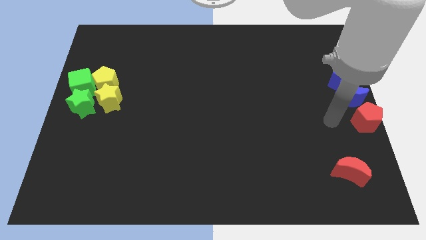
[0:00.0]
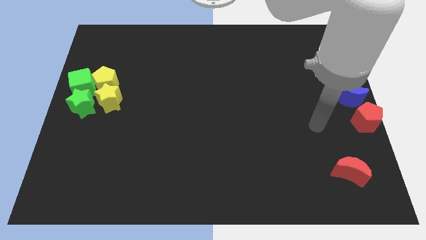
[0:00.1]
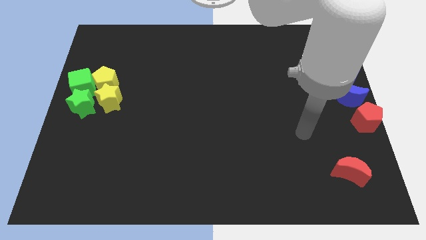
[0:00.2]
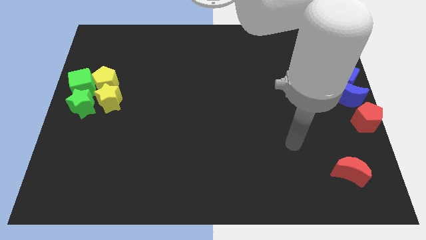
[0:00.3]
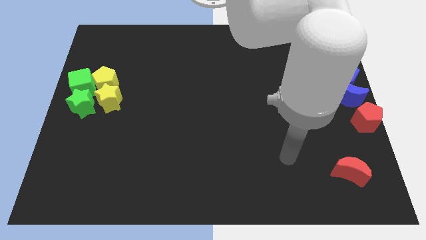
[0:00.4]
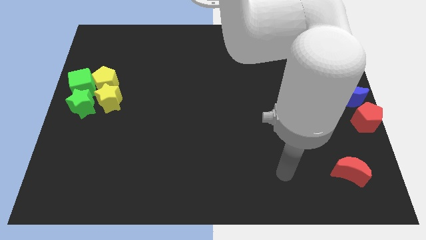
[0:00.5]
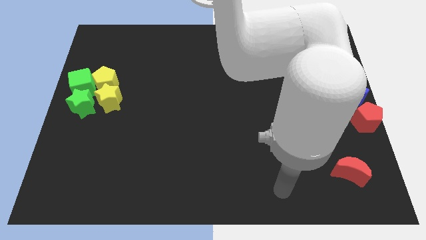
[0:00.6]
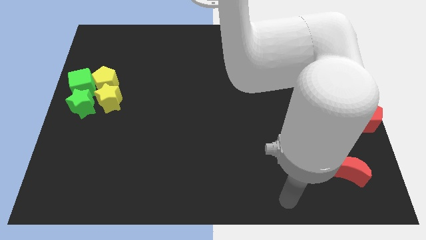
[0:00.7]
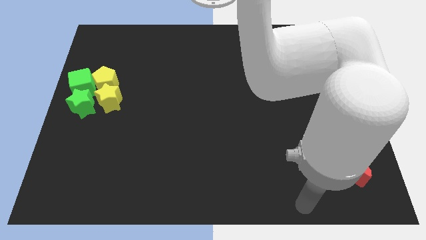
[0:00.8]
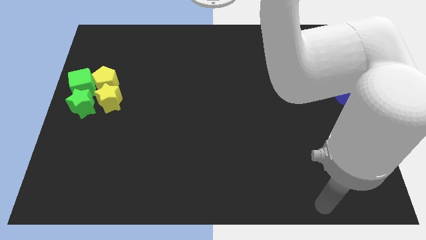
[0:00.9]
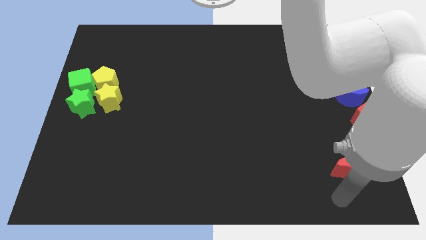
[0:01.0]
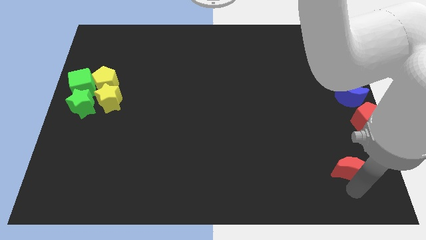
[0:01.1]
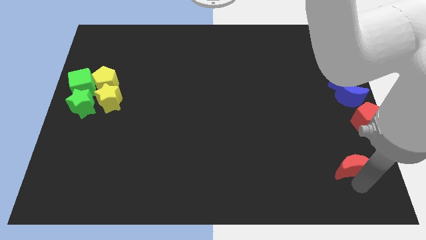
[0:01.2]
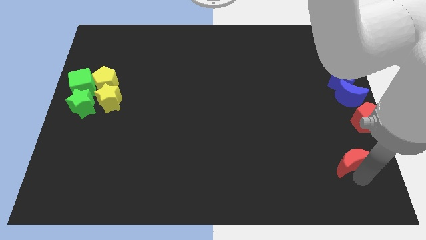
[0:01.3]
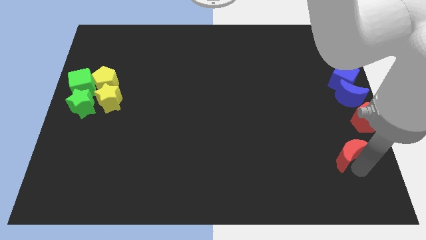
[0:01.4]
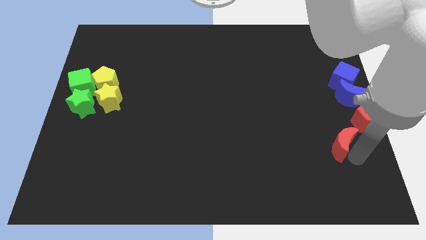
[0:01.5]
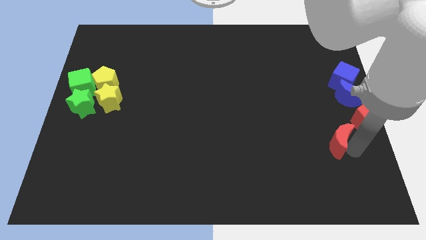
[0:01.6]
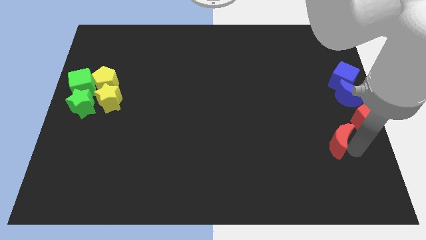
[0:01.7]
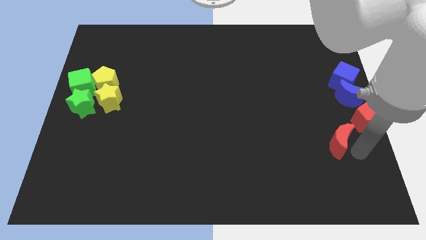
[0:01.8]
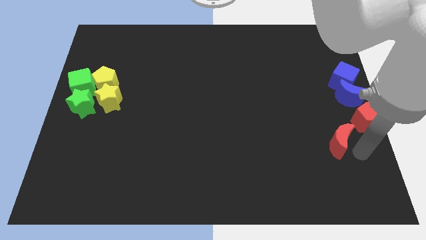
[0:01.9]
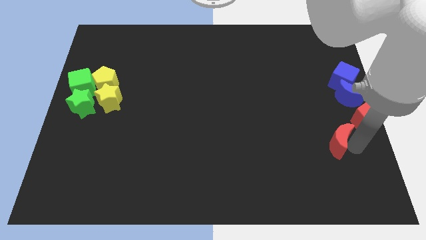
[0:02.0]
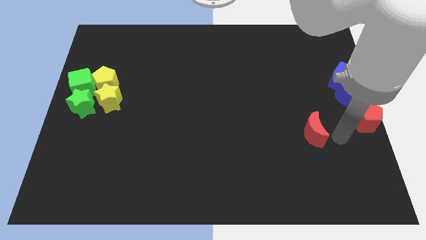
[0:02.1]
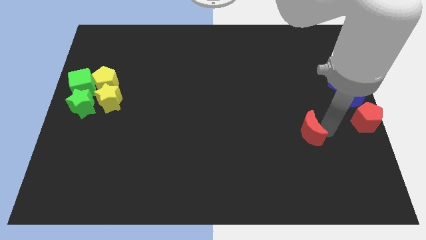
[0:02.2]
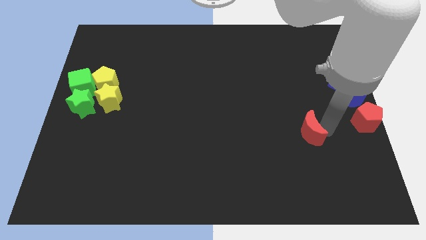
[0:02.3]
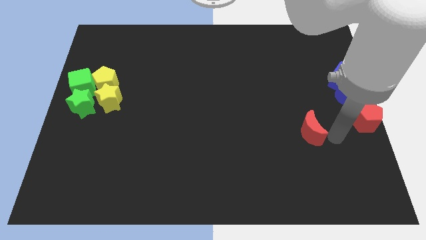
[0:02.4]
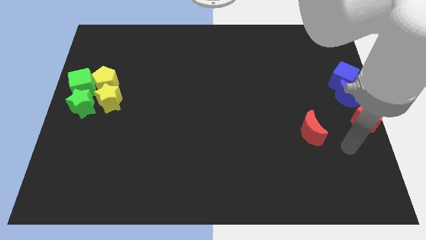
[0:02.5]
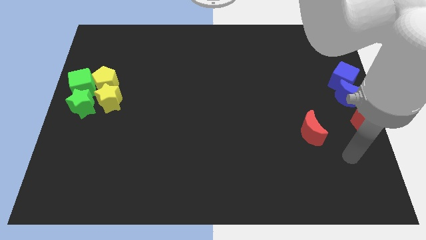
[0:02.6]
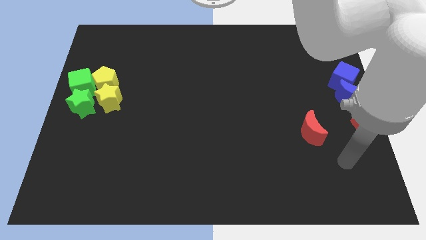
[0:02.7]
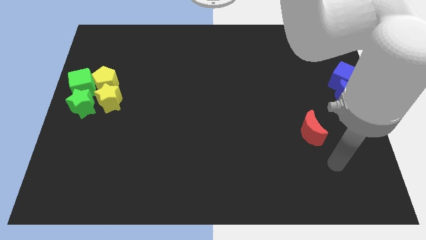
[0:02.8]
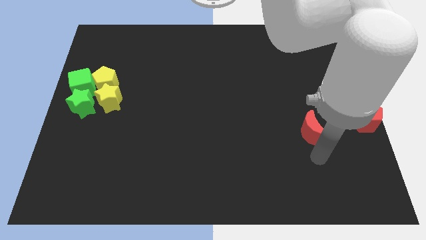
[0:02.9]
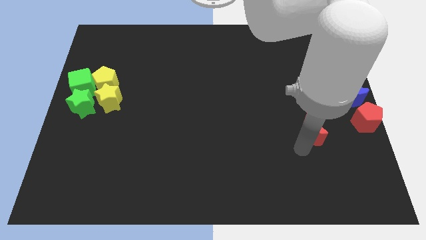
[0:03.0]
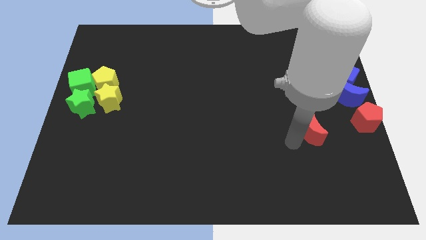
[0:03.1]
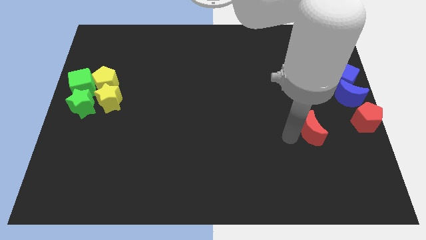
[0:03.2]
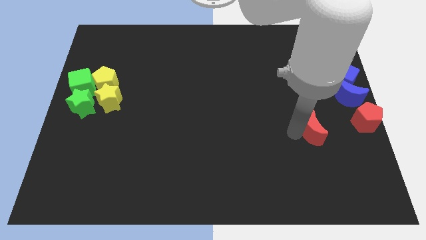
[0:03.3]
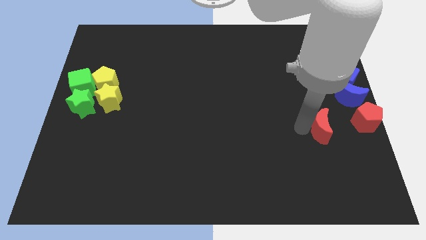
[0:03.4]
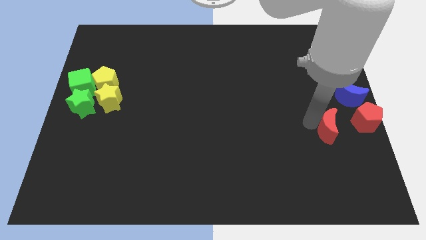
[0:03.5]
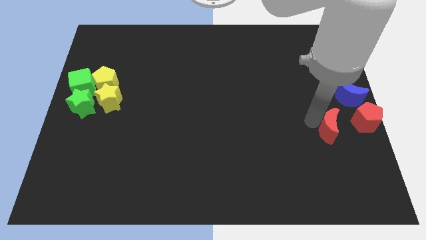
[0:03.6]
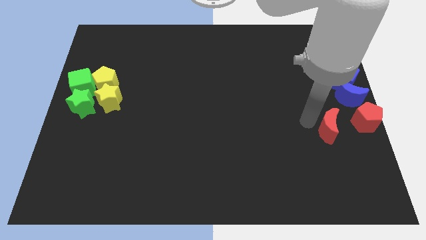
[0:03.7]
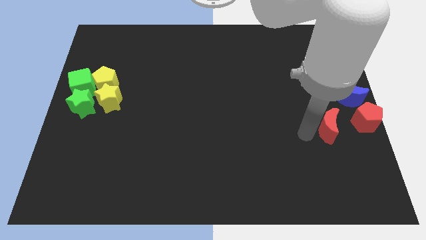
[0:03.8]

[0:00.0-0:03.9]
move the red crescent left to the red pentagon

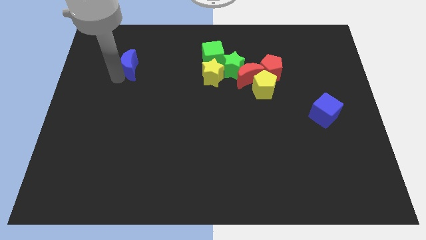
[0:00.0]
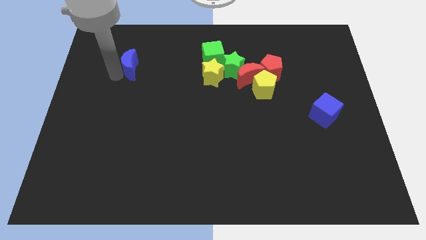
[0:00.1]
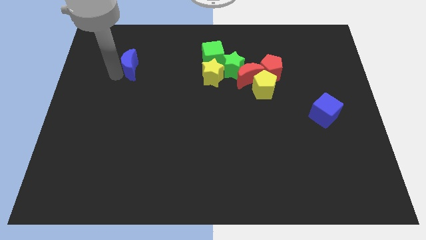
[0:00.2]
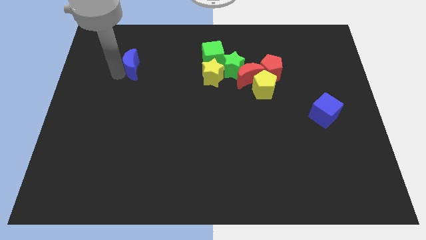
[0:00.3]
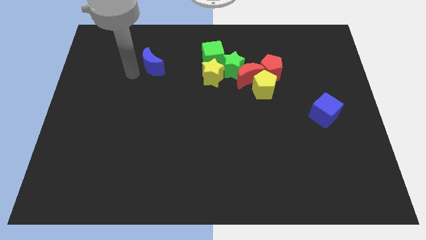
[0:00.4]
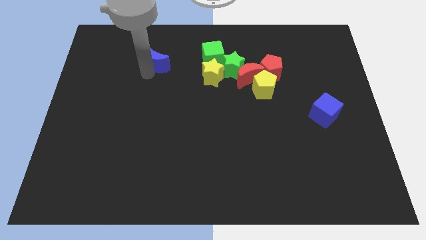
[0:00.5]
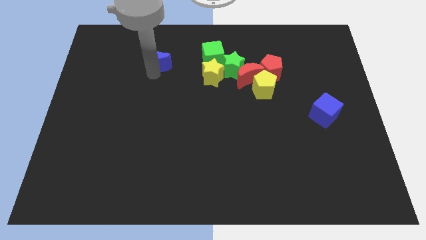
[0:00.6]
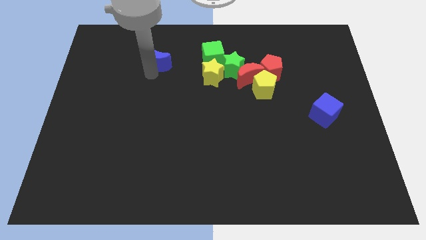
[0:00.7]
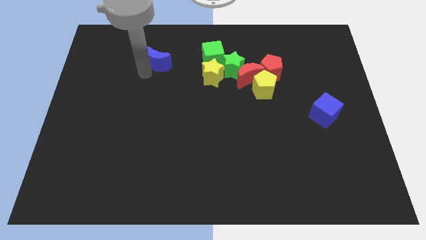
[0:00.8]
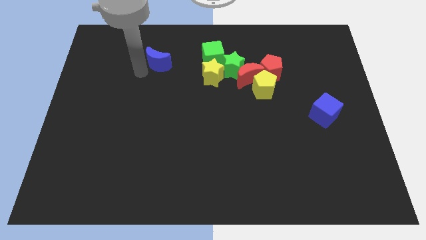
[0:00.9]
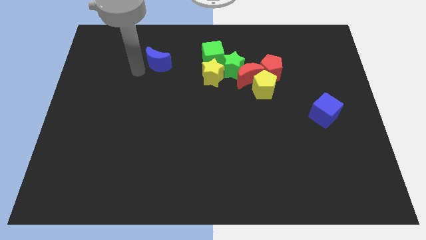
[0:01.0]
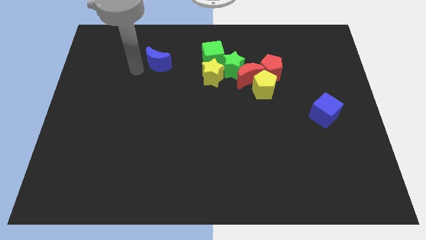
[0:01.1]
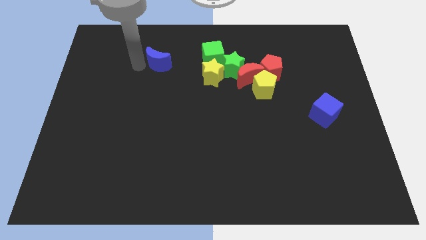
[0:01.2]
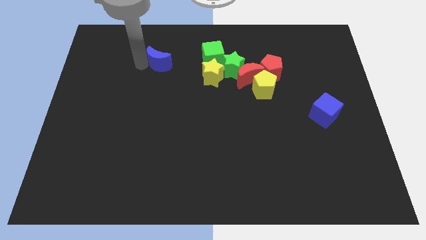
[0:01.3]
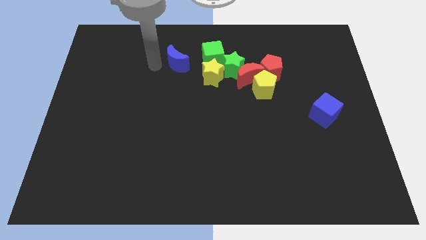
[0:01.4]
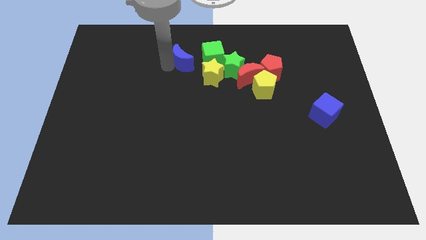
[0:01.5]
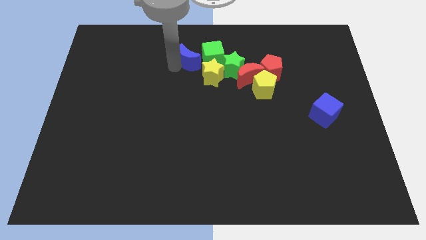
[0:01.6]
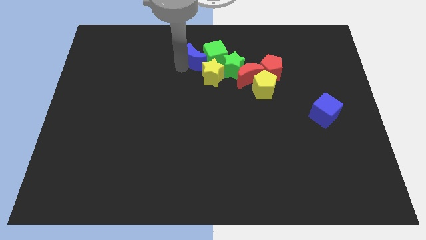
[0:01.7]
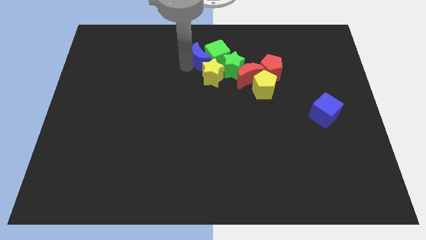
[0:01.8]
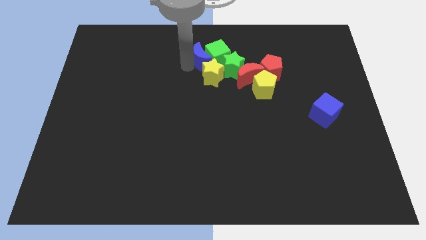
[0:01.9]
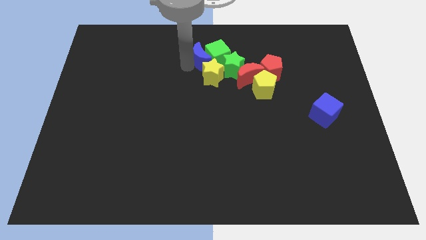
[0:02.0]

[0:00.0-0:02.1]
slide blue moon into green cube

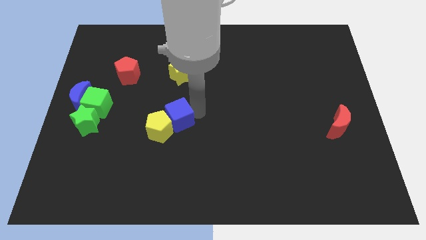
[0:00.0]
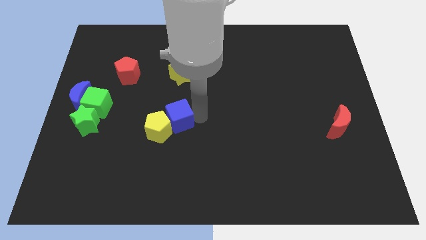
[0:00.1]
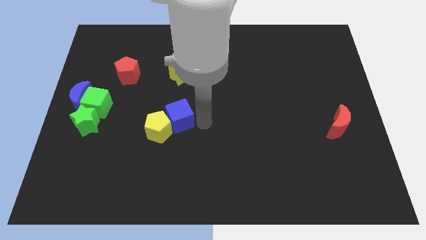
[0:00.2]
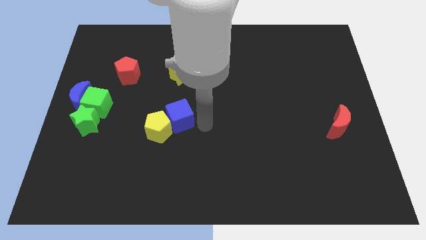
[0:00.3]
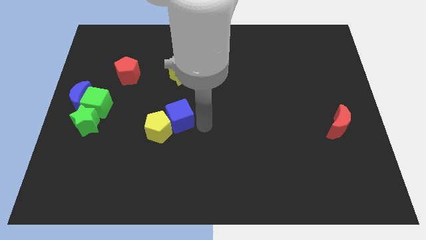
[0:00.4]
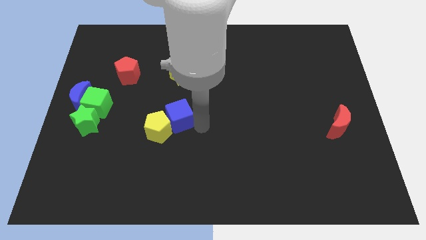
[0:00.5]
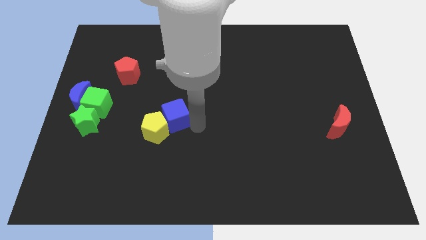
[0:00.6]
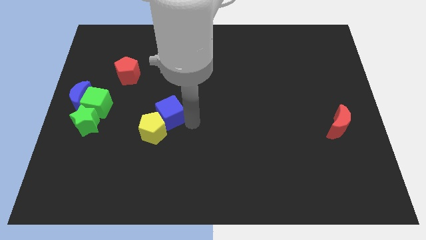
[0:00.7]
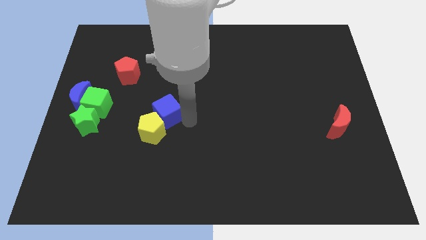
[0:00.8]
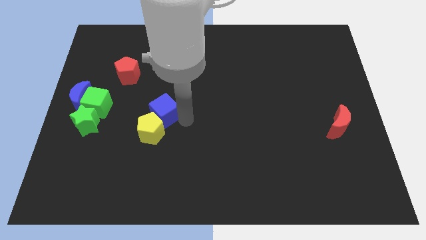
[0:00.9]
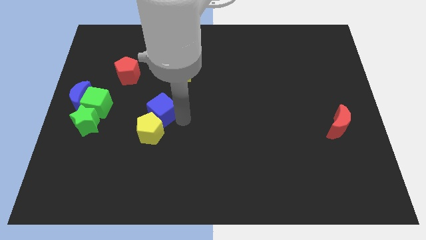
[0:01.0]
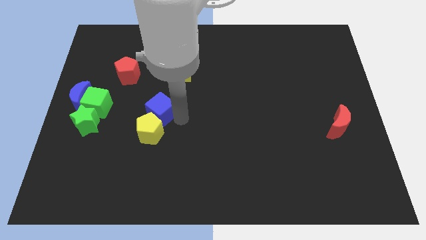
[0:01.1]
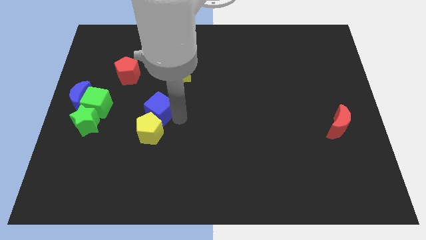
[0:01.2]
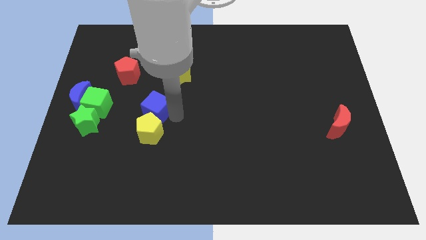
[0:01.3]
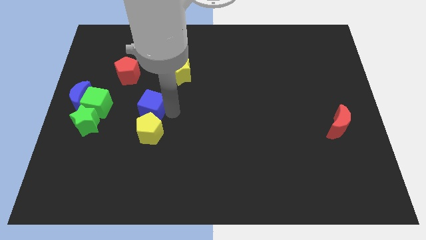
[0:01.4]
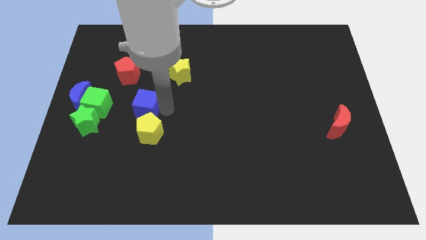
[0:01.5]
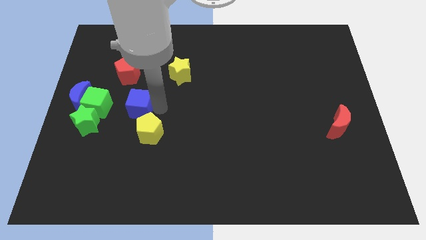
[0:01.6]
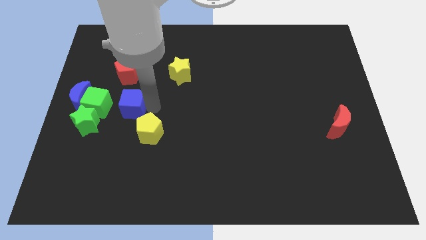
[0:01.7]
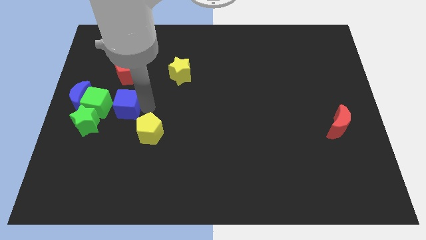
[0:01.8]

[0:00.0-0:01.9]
move the blue cube below the red pentagon

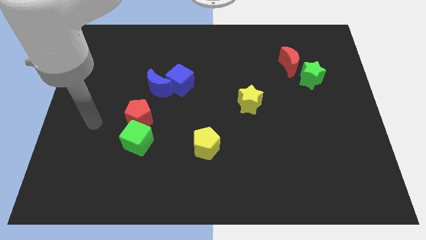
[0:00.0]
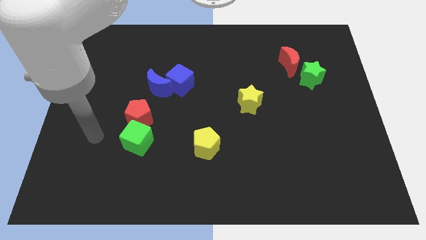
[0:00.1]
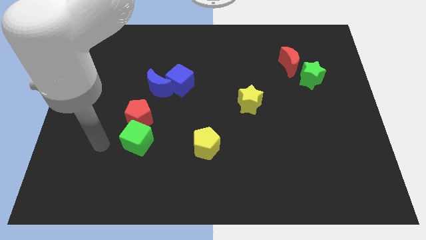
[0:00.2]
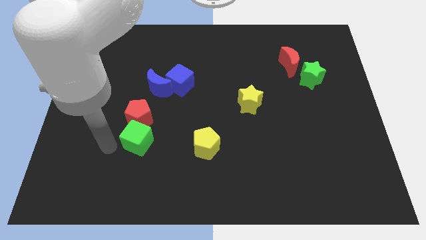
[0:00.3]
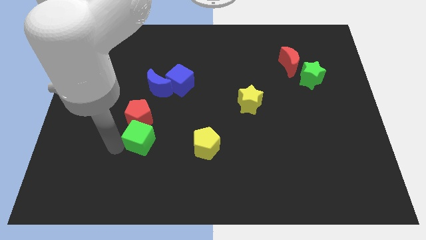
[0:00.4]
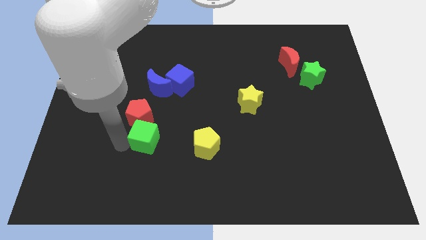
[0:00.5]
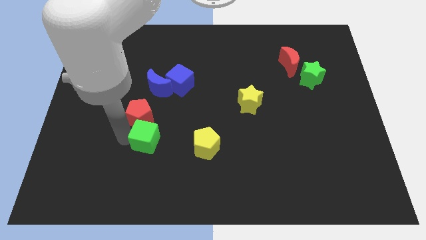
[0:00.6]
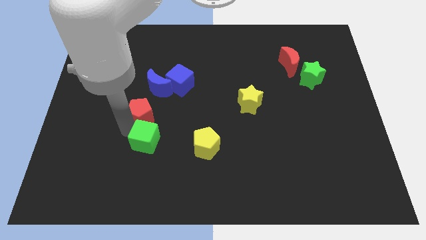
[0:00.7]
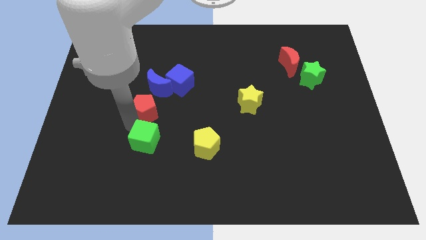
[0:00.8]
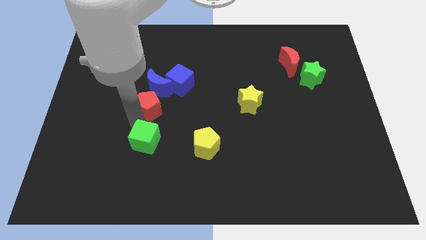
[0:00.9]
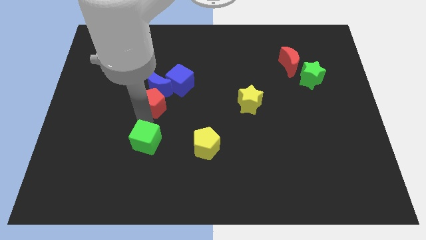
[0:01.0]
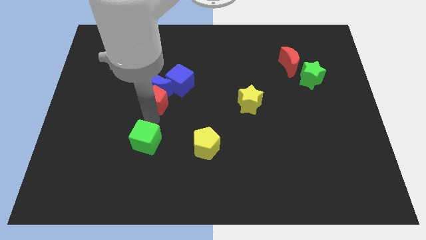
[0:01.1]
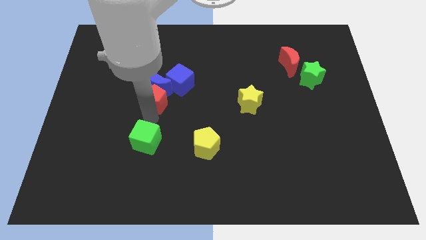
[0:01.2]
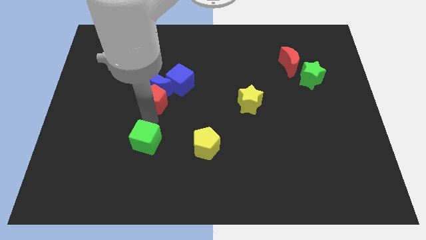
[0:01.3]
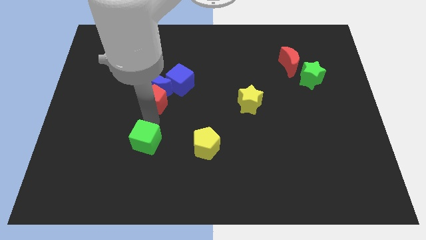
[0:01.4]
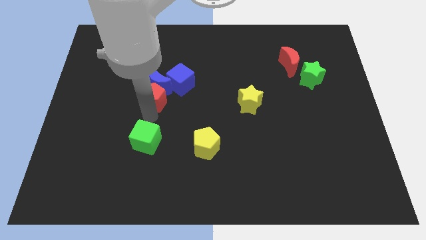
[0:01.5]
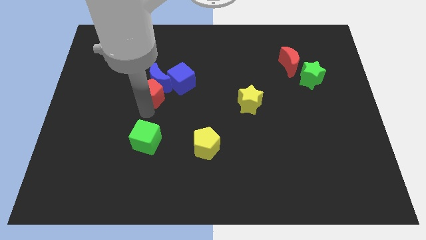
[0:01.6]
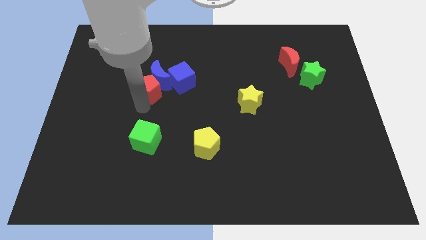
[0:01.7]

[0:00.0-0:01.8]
move the red pentagon into the blue crescent
